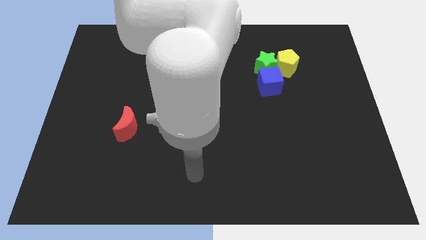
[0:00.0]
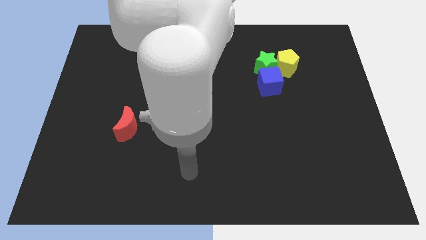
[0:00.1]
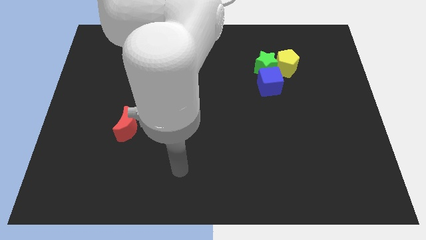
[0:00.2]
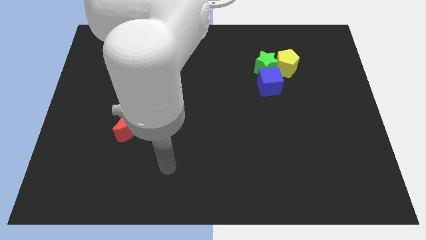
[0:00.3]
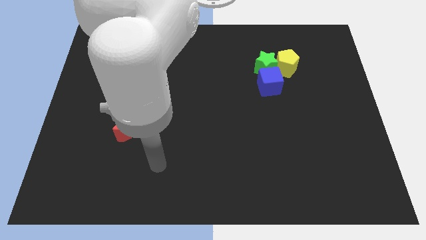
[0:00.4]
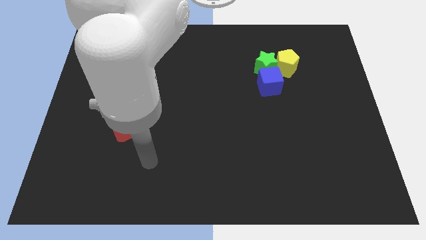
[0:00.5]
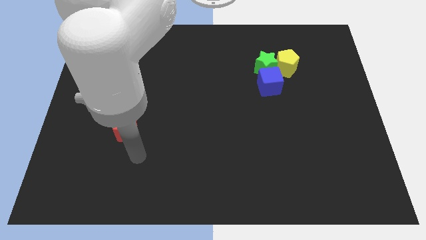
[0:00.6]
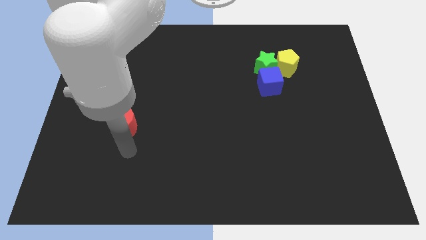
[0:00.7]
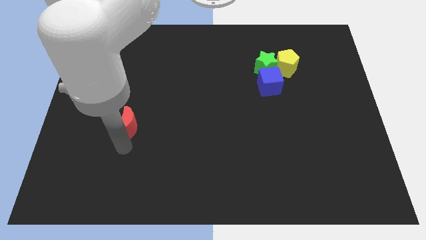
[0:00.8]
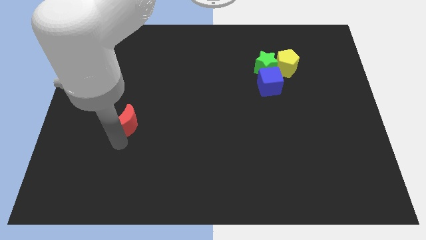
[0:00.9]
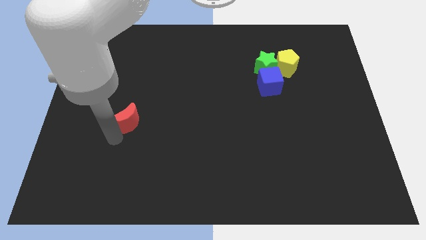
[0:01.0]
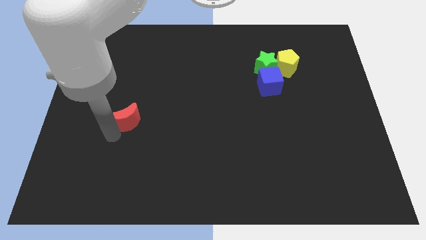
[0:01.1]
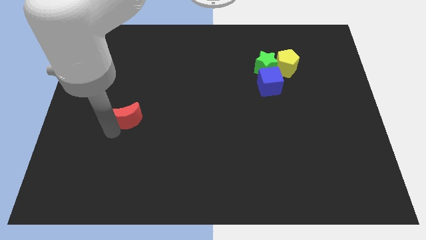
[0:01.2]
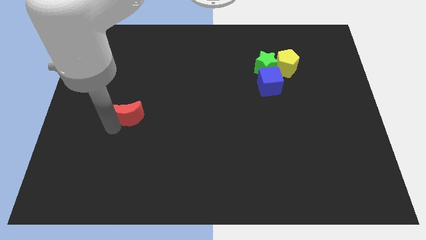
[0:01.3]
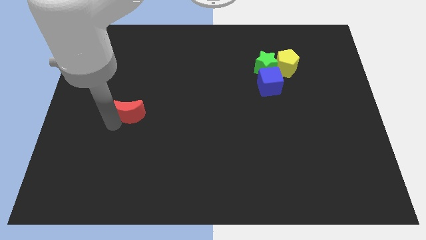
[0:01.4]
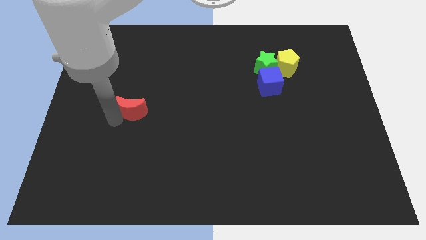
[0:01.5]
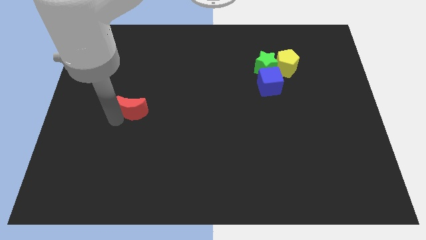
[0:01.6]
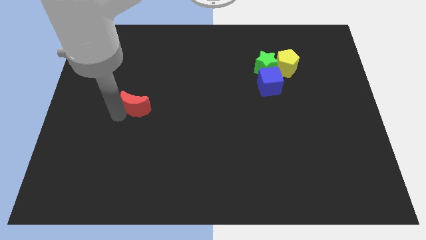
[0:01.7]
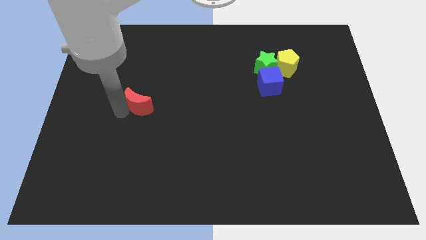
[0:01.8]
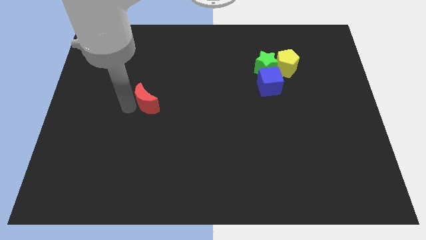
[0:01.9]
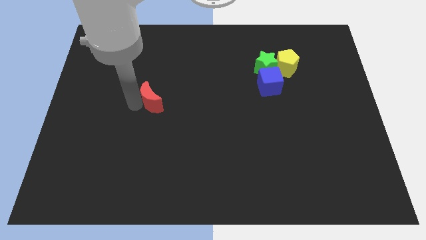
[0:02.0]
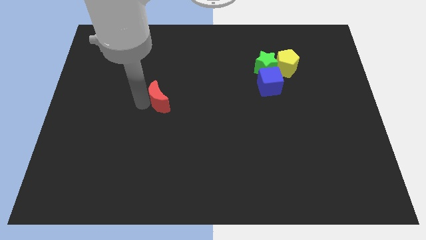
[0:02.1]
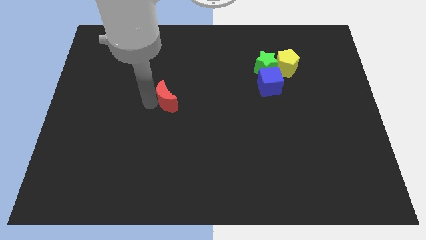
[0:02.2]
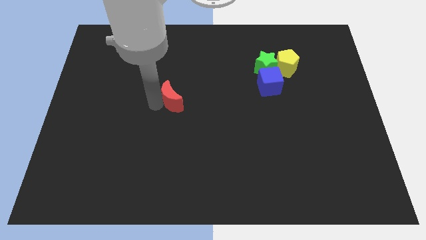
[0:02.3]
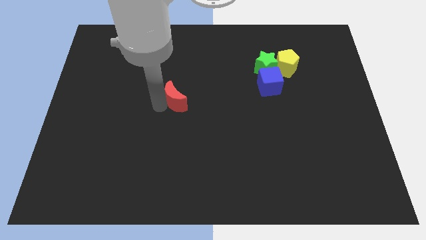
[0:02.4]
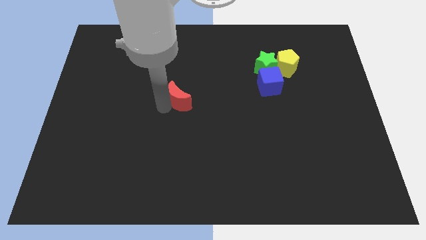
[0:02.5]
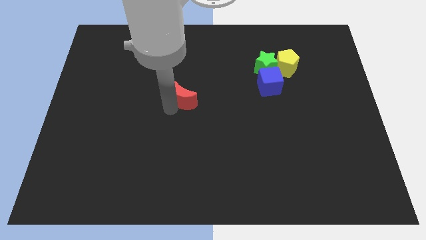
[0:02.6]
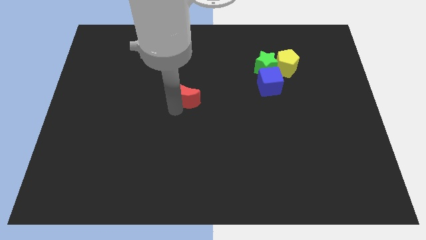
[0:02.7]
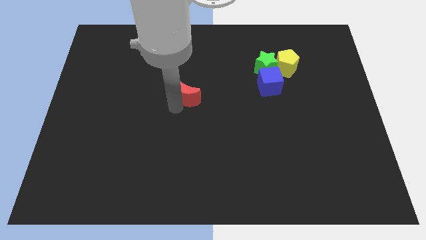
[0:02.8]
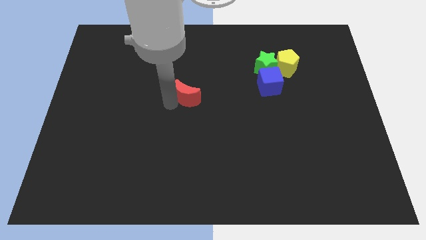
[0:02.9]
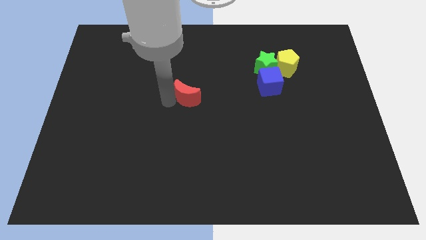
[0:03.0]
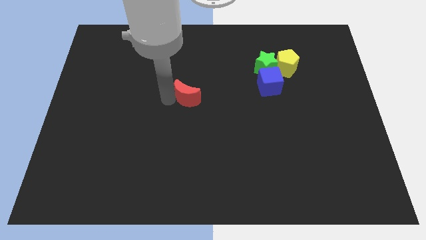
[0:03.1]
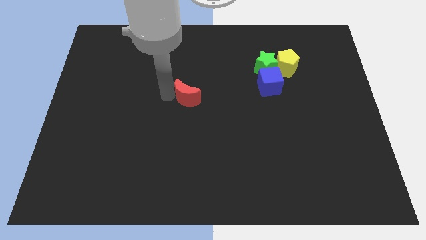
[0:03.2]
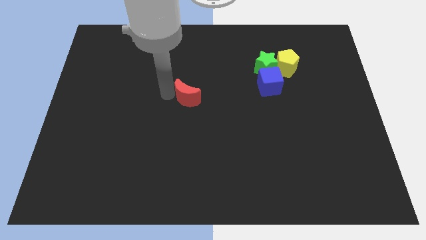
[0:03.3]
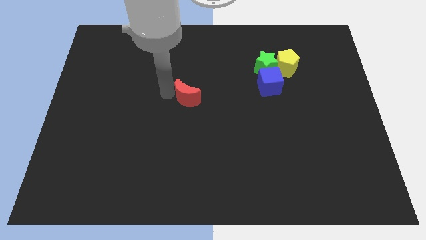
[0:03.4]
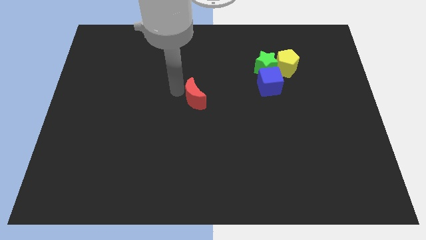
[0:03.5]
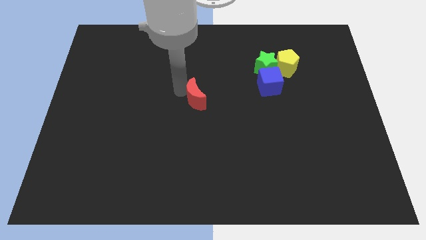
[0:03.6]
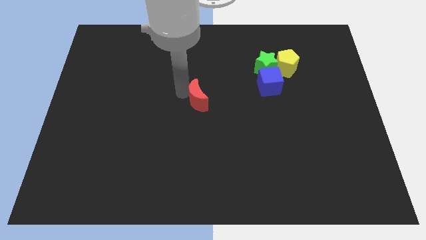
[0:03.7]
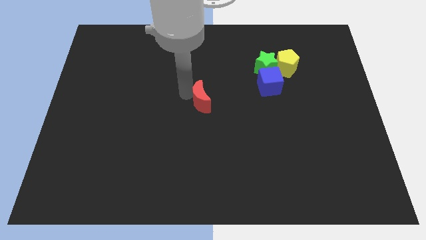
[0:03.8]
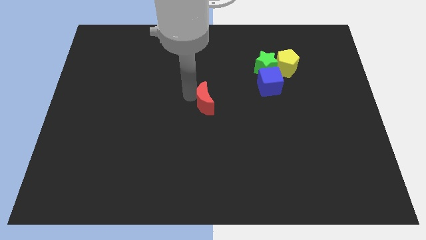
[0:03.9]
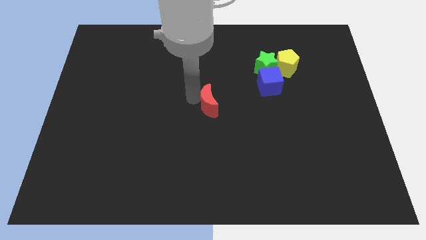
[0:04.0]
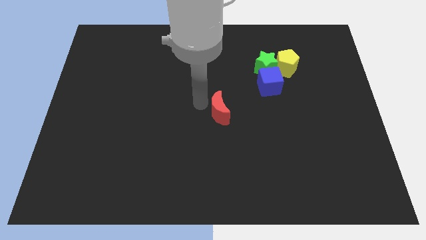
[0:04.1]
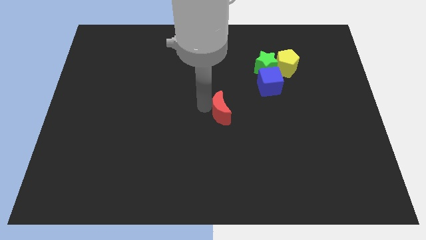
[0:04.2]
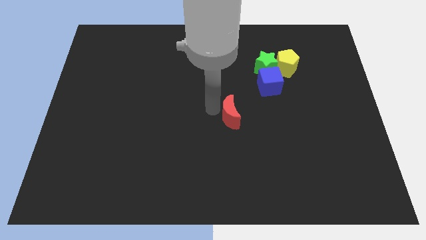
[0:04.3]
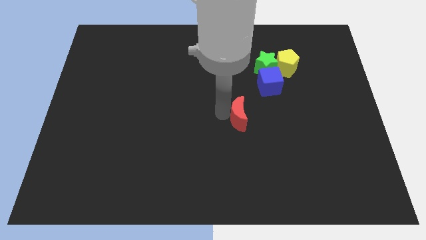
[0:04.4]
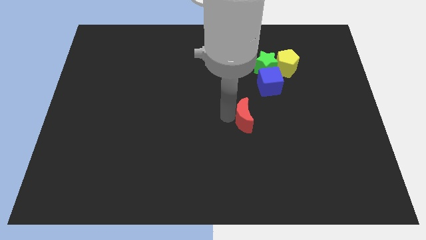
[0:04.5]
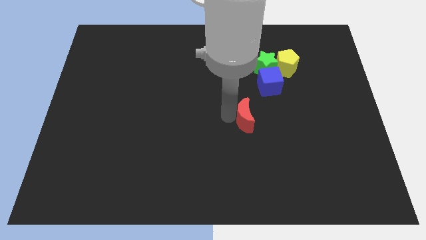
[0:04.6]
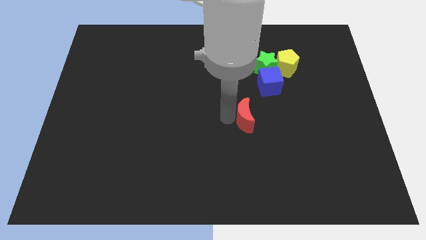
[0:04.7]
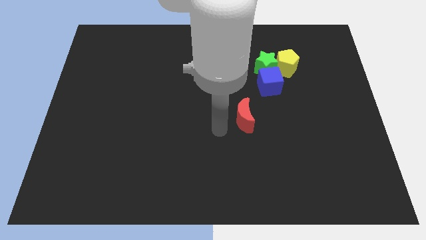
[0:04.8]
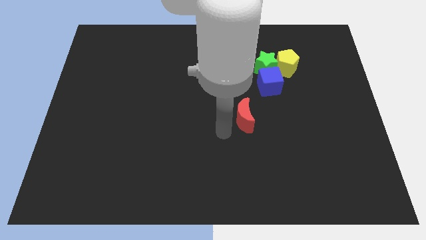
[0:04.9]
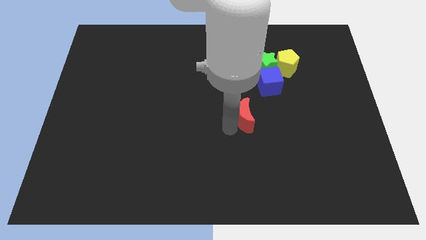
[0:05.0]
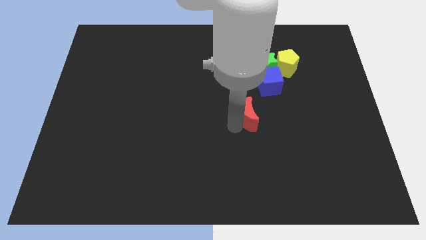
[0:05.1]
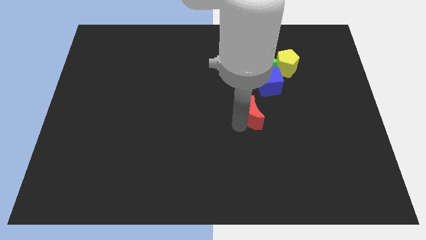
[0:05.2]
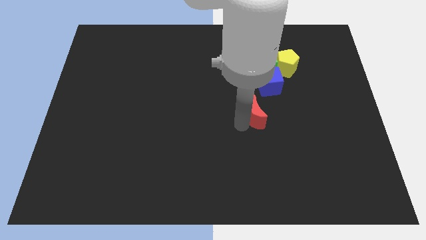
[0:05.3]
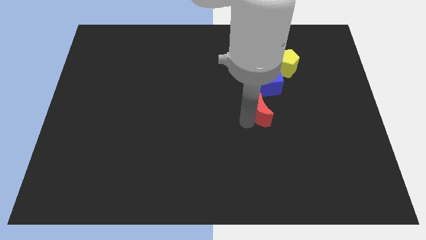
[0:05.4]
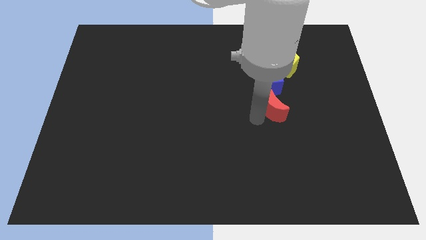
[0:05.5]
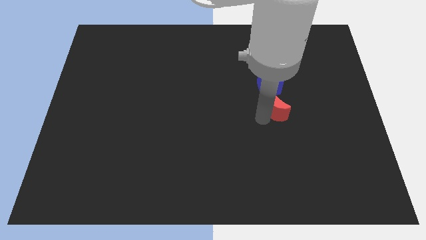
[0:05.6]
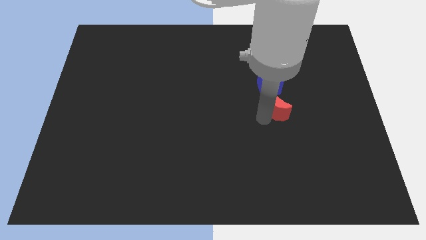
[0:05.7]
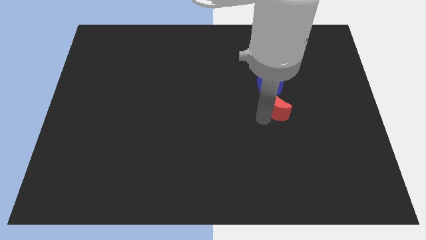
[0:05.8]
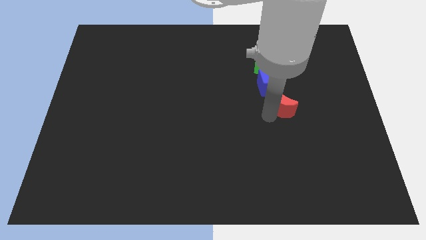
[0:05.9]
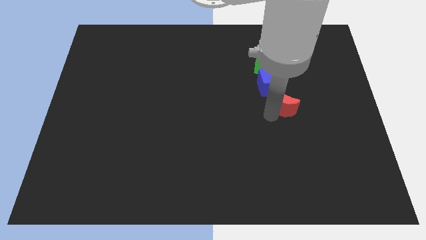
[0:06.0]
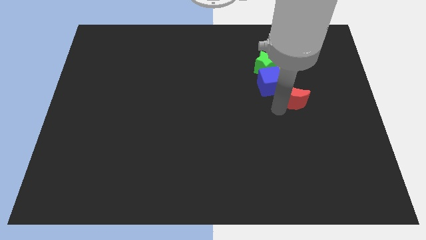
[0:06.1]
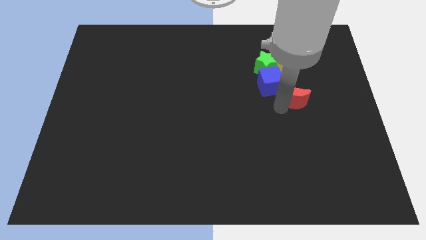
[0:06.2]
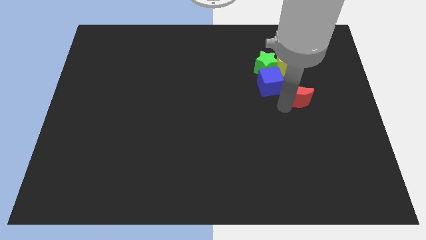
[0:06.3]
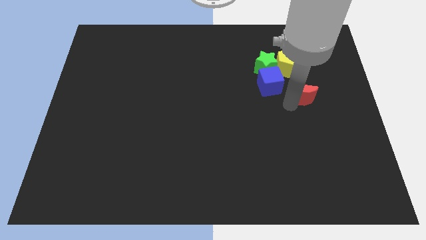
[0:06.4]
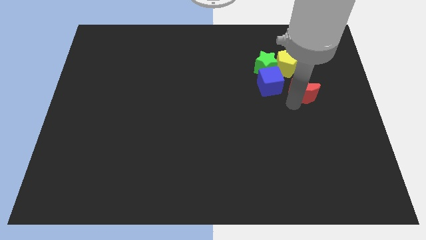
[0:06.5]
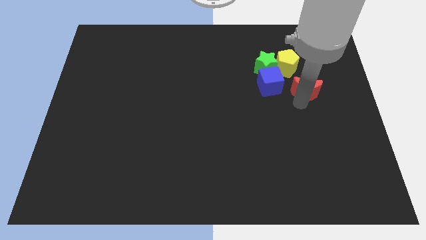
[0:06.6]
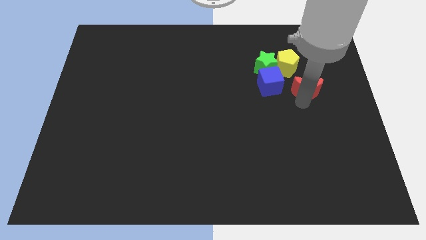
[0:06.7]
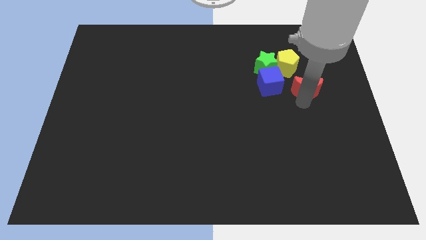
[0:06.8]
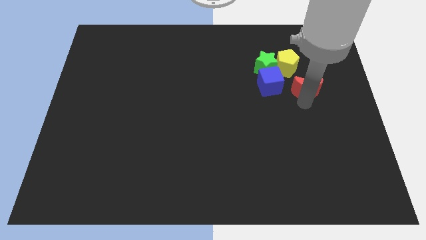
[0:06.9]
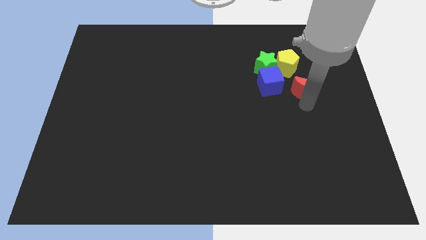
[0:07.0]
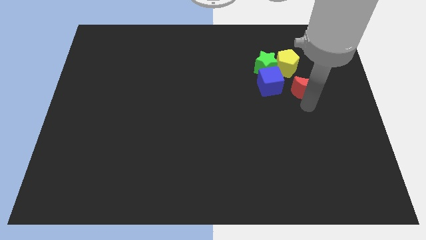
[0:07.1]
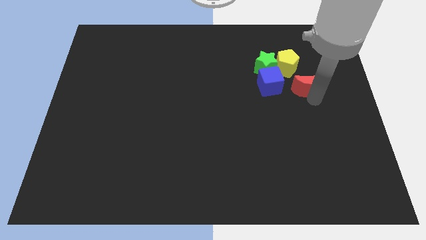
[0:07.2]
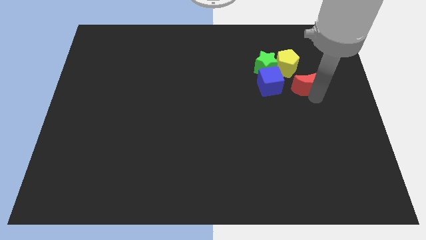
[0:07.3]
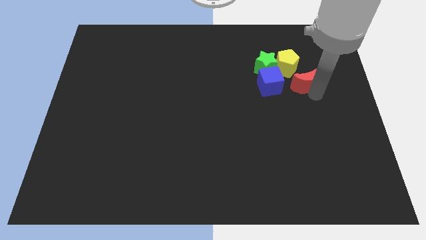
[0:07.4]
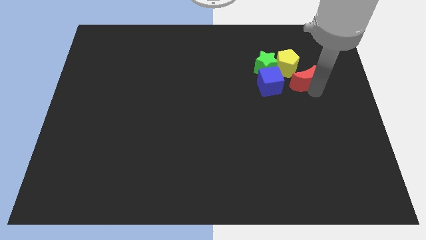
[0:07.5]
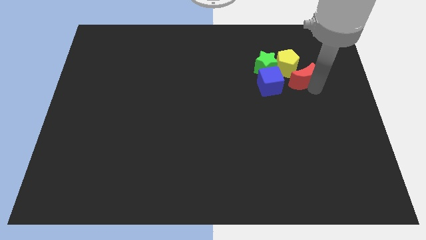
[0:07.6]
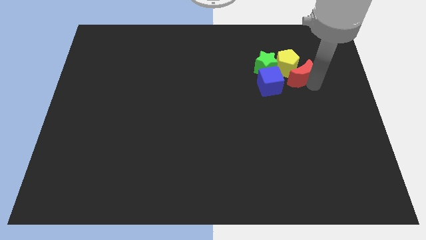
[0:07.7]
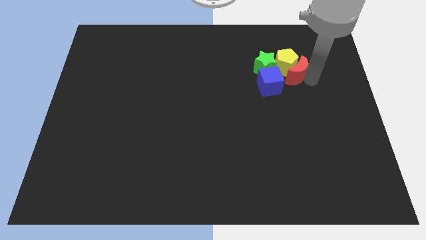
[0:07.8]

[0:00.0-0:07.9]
put the red moon close to the yellow pentagon

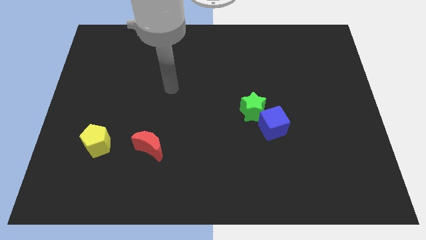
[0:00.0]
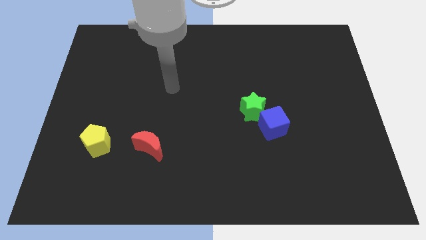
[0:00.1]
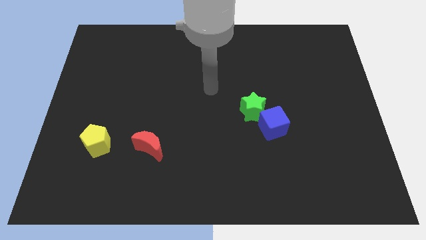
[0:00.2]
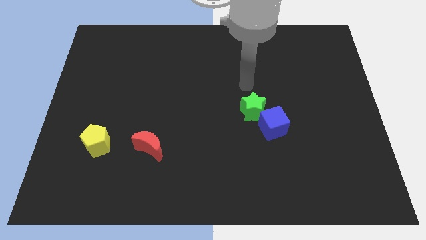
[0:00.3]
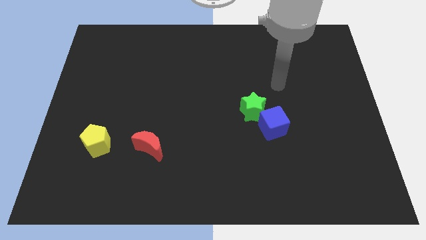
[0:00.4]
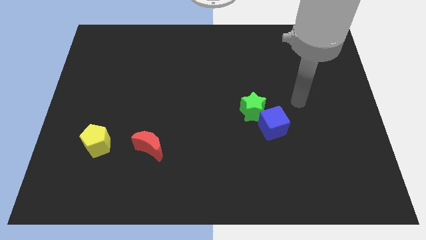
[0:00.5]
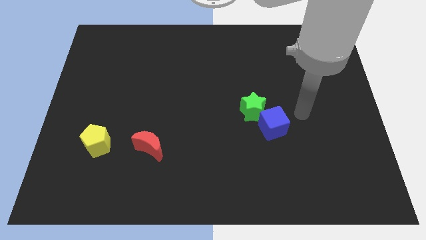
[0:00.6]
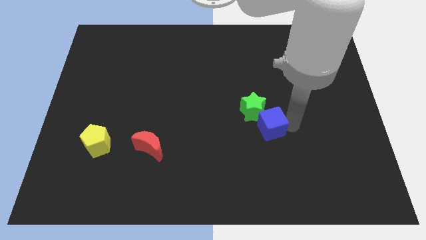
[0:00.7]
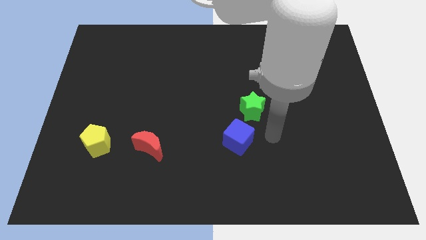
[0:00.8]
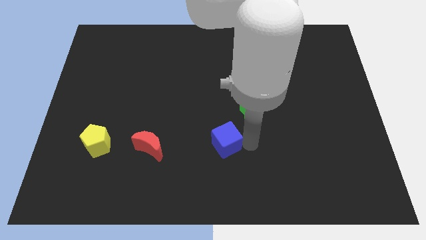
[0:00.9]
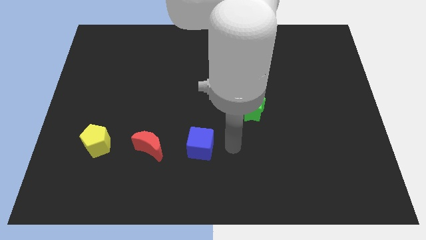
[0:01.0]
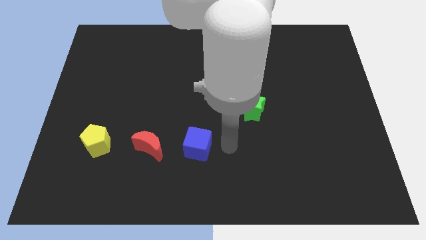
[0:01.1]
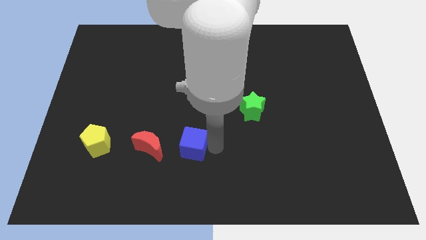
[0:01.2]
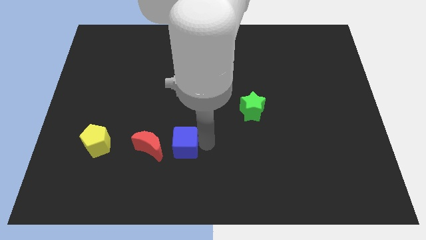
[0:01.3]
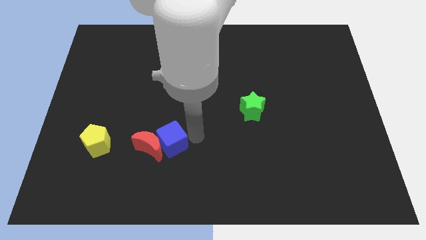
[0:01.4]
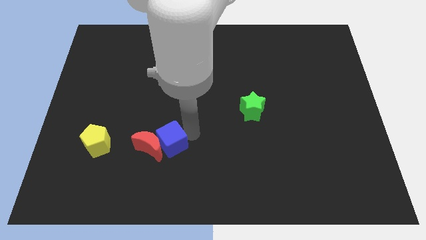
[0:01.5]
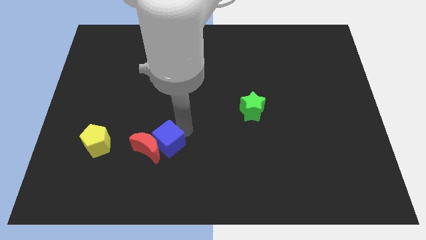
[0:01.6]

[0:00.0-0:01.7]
put the blue block close to the moon
